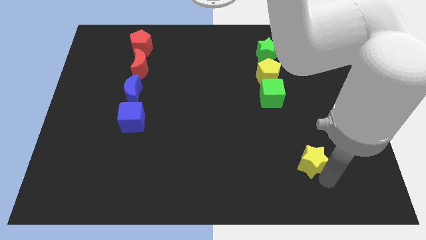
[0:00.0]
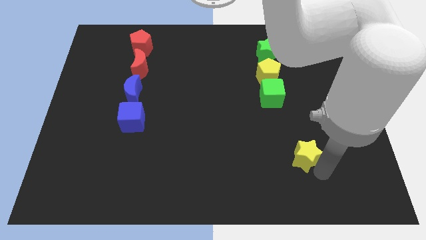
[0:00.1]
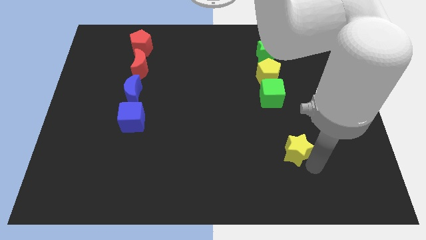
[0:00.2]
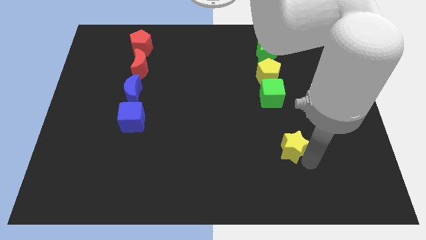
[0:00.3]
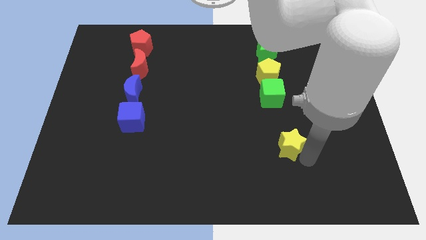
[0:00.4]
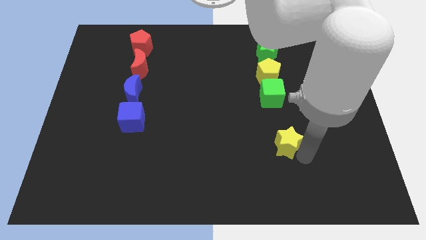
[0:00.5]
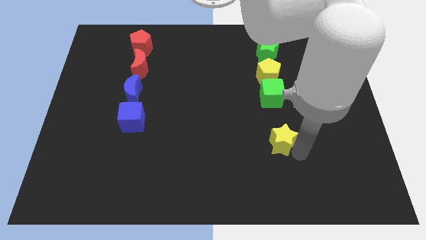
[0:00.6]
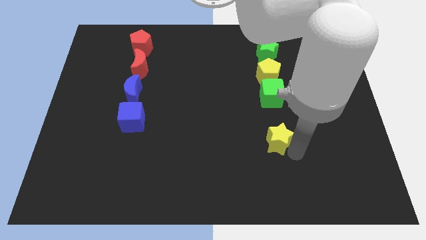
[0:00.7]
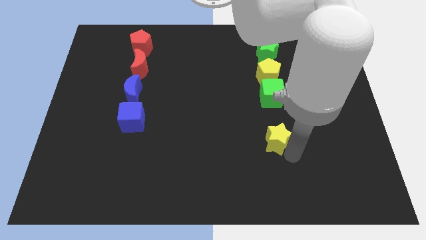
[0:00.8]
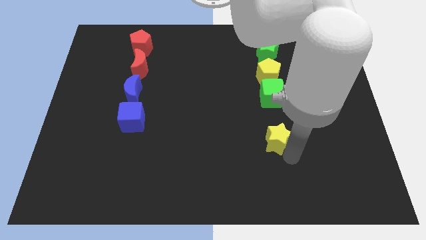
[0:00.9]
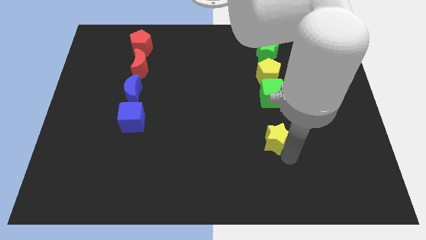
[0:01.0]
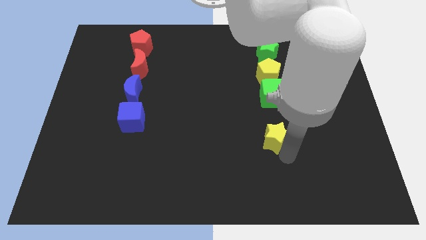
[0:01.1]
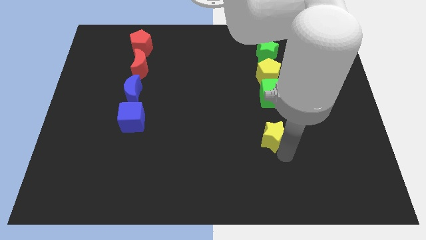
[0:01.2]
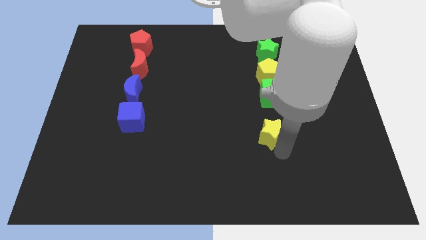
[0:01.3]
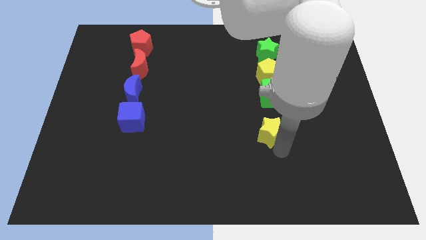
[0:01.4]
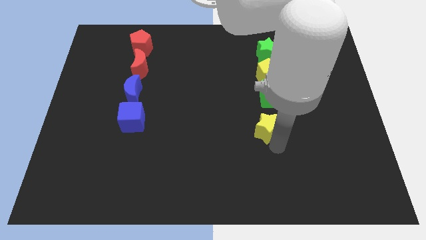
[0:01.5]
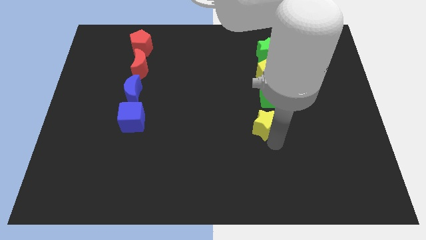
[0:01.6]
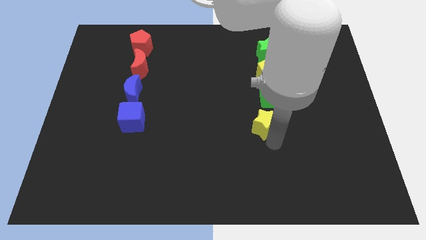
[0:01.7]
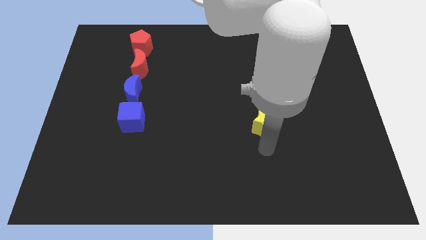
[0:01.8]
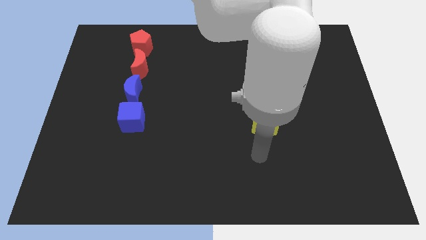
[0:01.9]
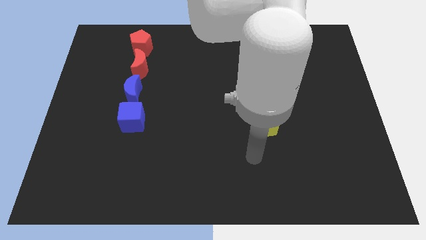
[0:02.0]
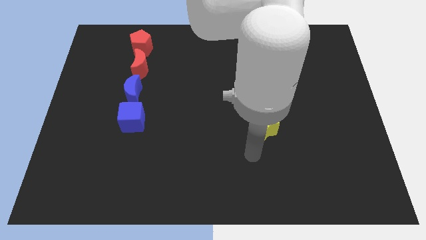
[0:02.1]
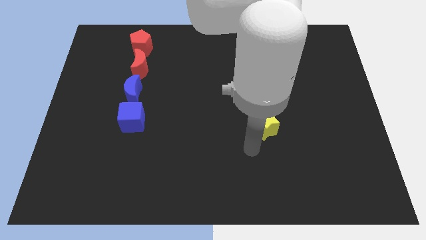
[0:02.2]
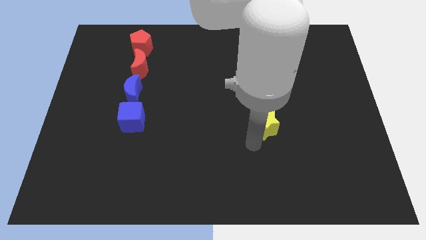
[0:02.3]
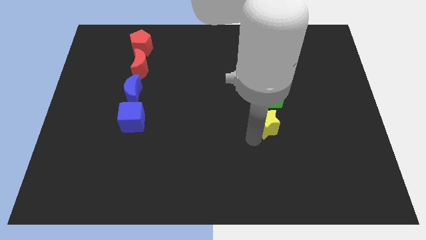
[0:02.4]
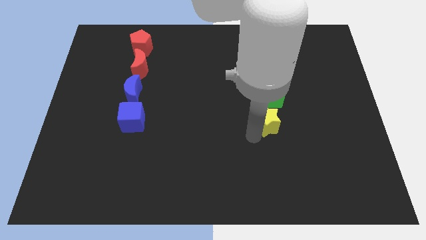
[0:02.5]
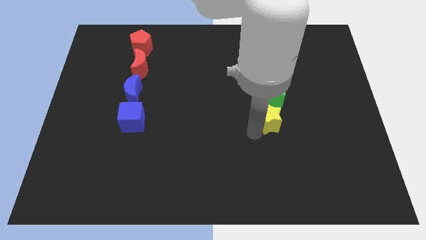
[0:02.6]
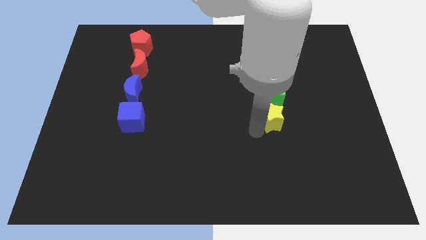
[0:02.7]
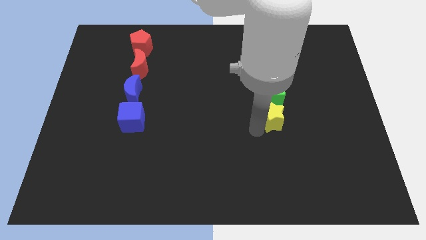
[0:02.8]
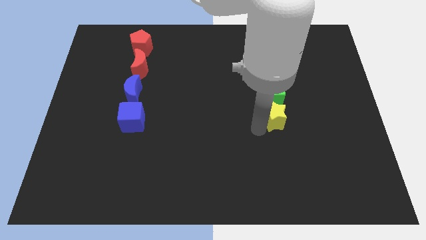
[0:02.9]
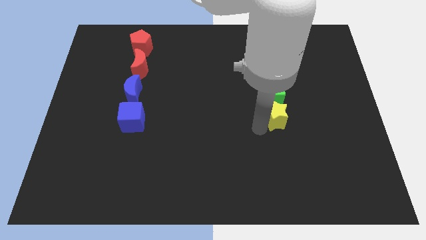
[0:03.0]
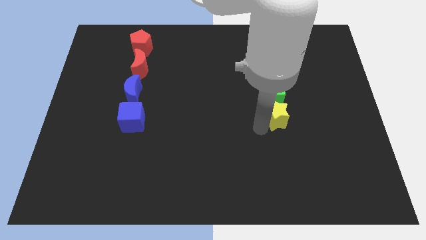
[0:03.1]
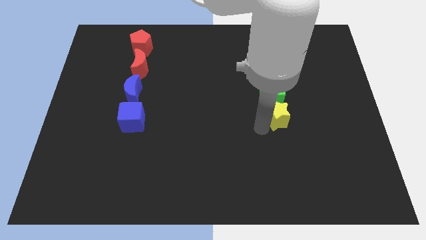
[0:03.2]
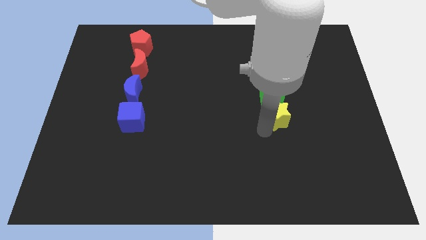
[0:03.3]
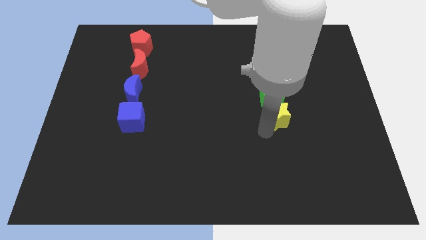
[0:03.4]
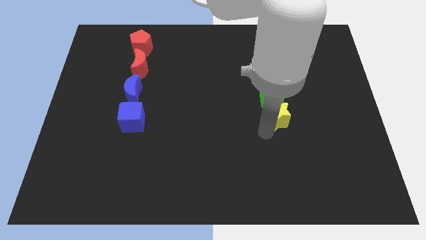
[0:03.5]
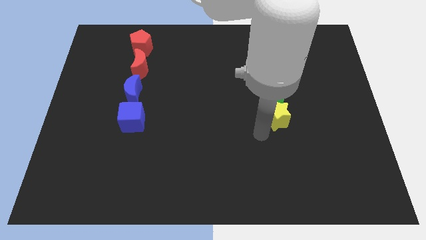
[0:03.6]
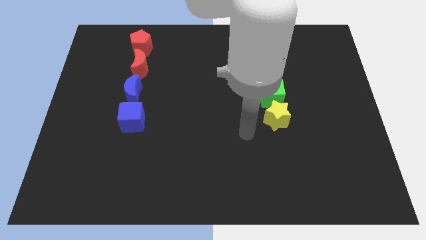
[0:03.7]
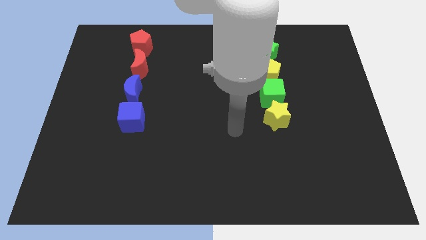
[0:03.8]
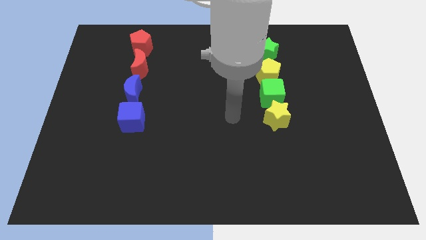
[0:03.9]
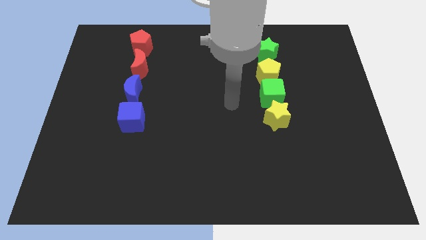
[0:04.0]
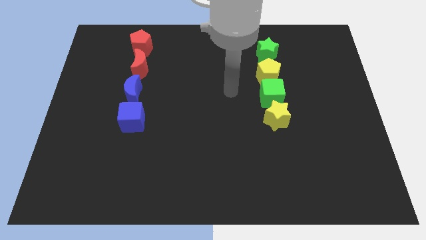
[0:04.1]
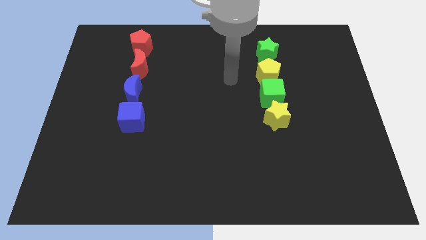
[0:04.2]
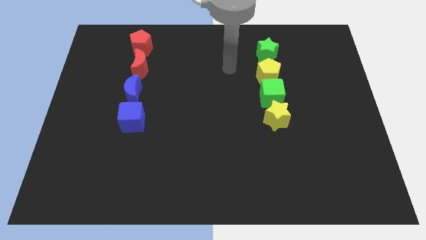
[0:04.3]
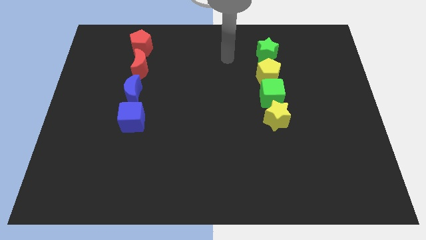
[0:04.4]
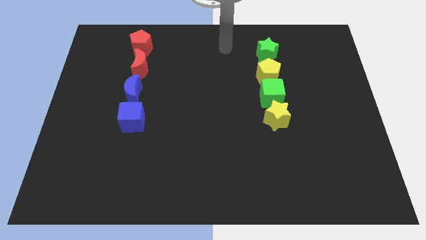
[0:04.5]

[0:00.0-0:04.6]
place the yellow star below the green cube

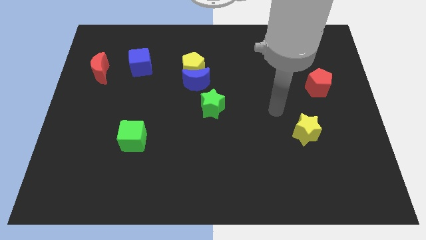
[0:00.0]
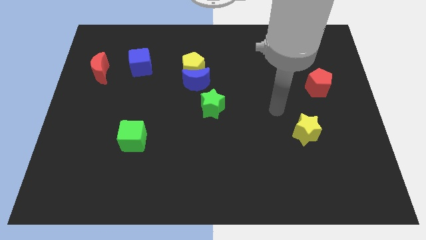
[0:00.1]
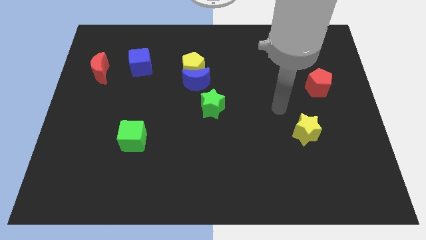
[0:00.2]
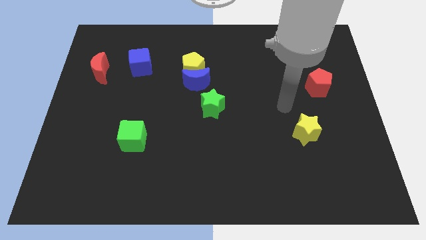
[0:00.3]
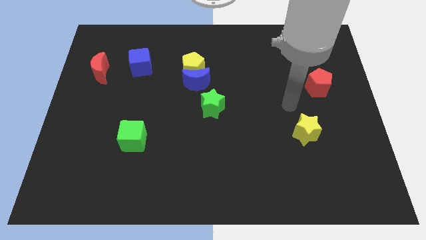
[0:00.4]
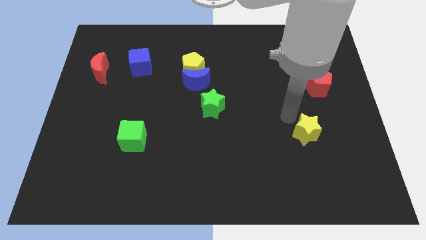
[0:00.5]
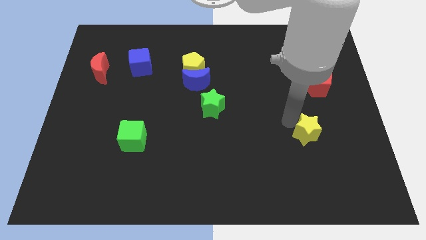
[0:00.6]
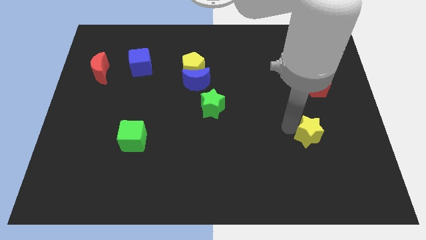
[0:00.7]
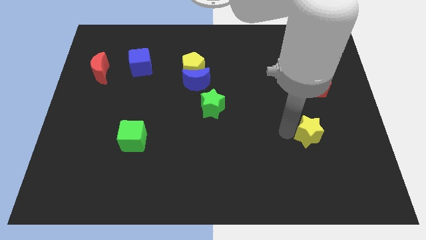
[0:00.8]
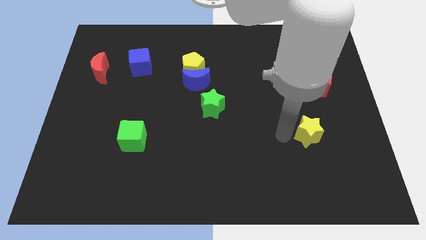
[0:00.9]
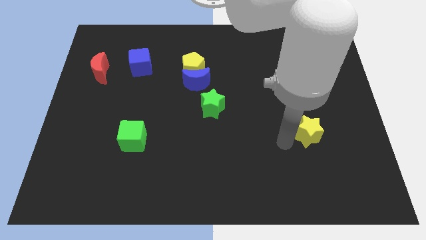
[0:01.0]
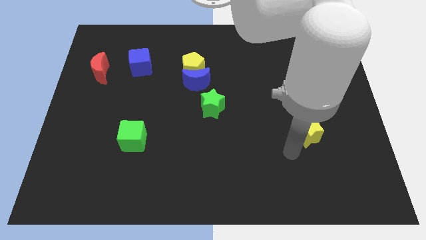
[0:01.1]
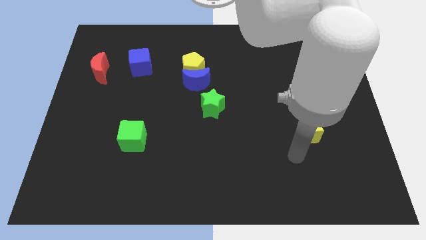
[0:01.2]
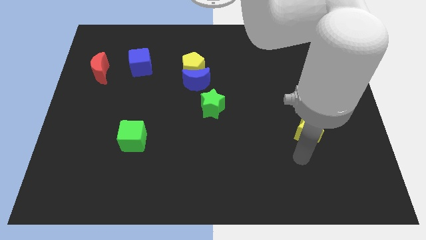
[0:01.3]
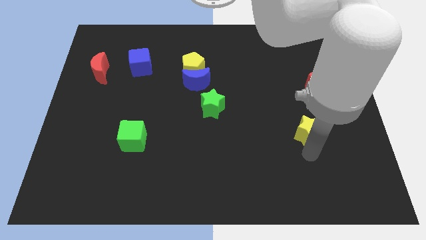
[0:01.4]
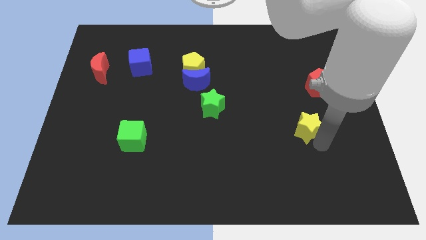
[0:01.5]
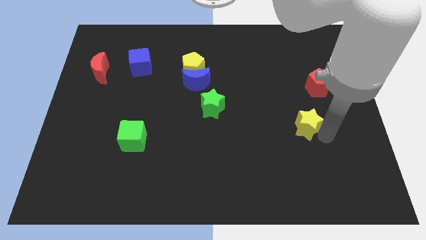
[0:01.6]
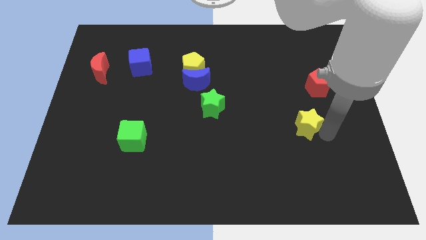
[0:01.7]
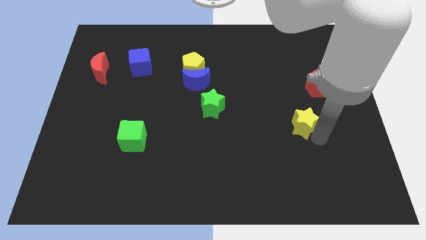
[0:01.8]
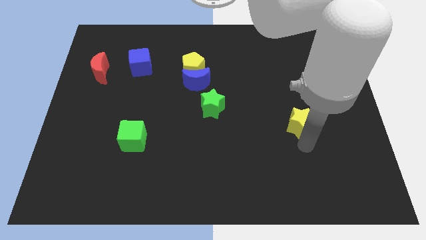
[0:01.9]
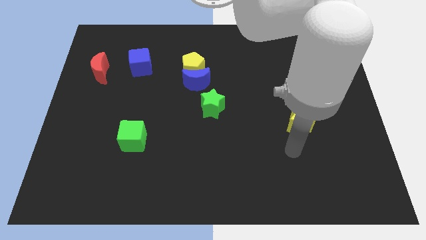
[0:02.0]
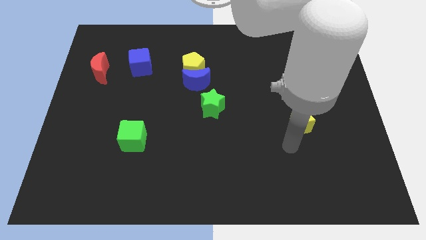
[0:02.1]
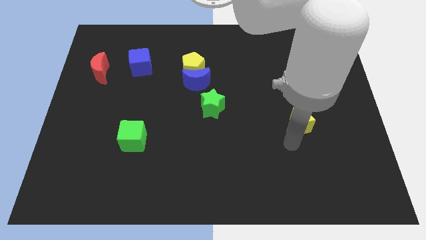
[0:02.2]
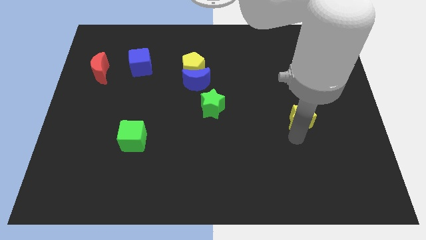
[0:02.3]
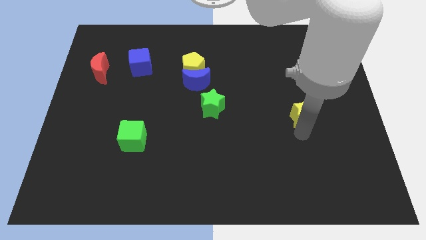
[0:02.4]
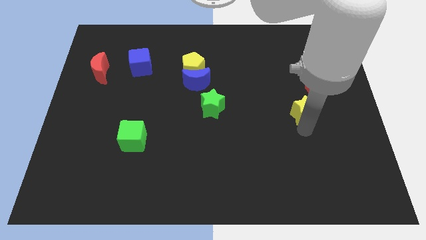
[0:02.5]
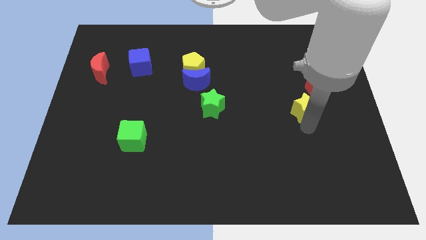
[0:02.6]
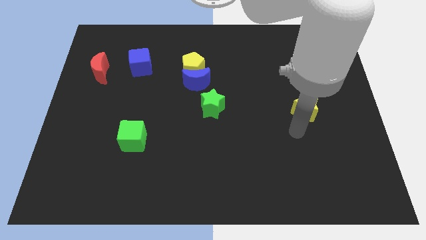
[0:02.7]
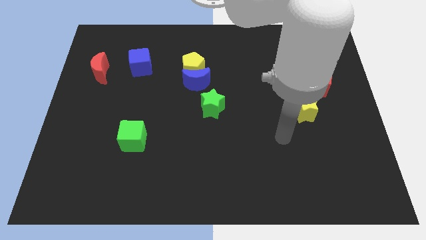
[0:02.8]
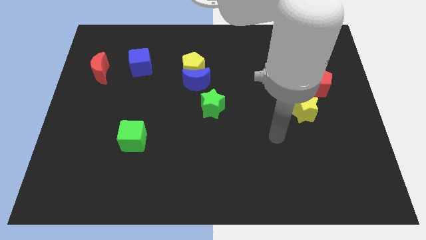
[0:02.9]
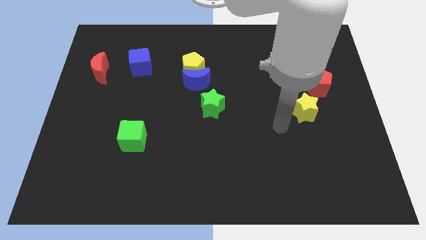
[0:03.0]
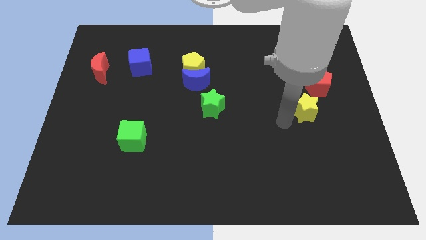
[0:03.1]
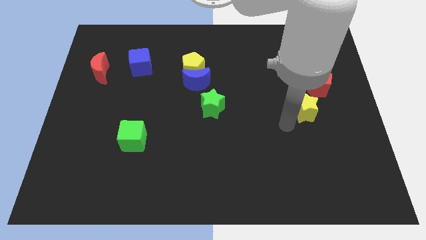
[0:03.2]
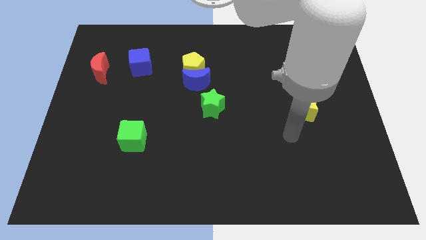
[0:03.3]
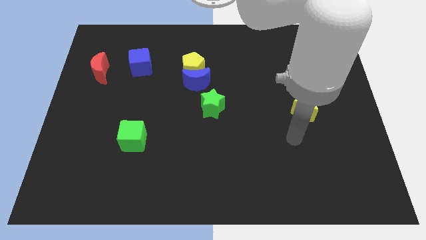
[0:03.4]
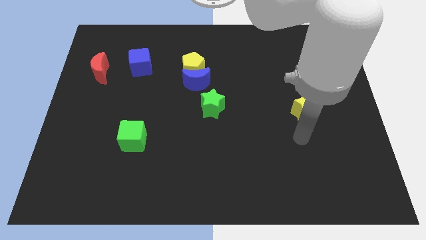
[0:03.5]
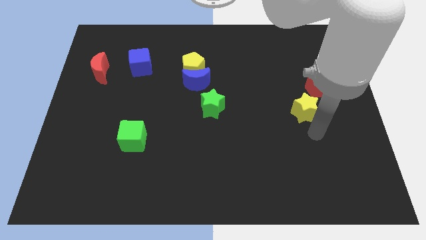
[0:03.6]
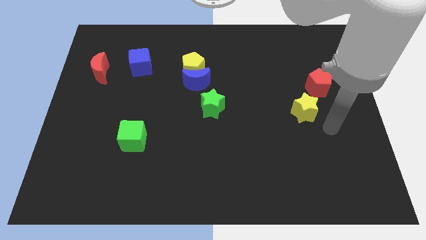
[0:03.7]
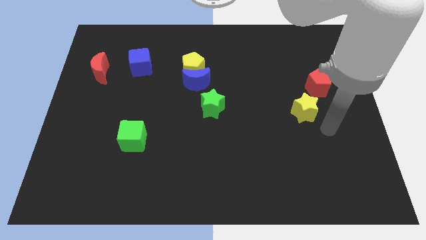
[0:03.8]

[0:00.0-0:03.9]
move the yellow star close to the red pentagon

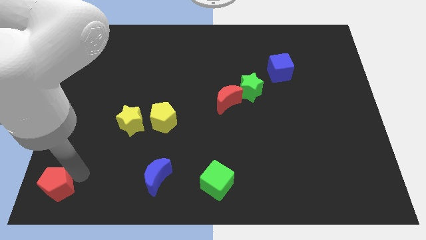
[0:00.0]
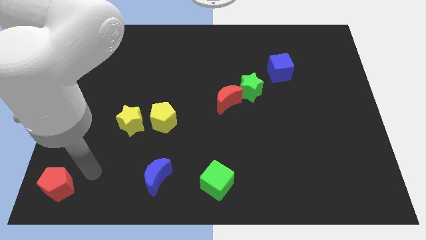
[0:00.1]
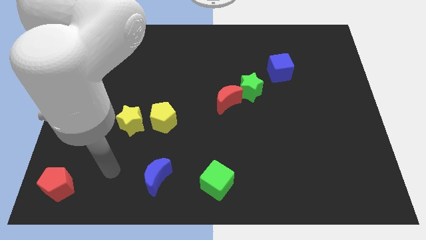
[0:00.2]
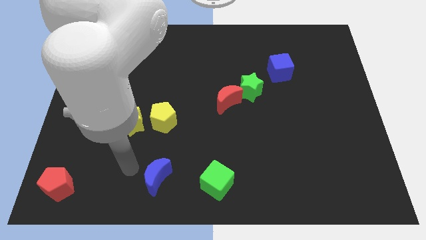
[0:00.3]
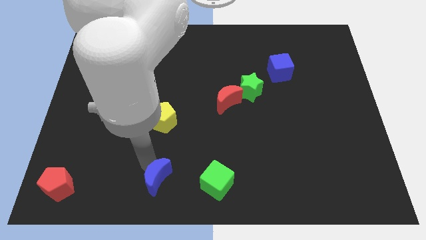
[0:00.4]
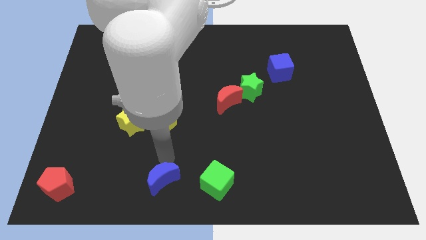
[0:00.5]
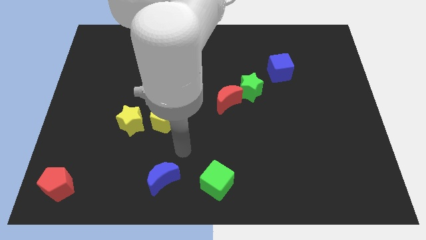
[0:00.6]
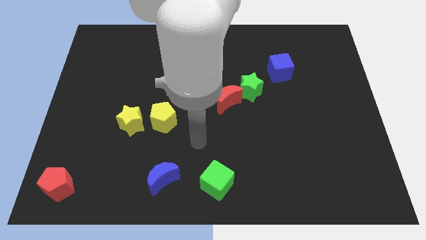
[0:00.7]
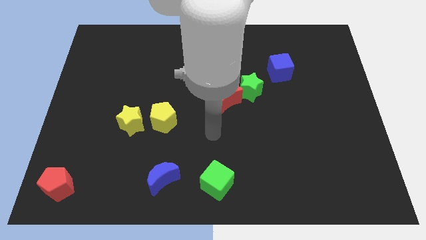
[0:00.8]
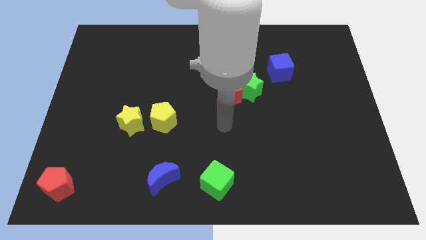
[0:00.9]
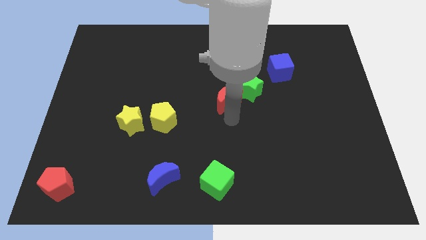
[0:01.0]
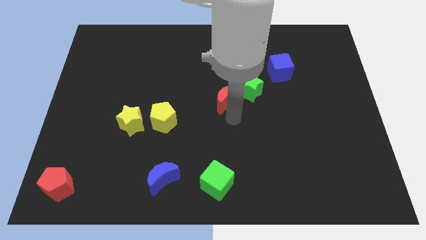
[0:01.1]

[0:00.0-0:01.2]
place your hand below the red crescent
